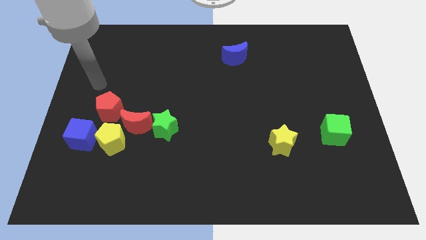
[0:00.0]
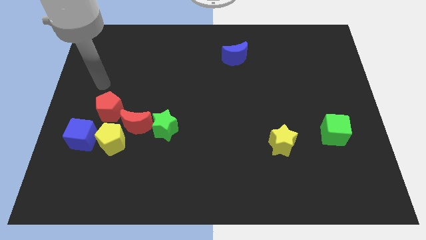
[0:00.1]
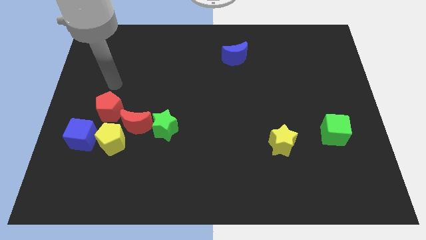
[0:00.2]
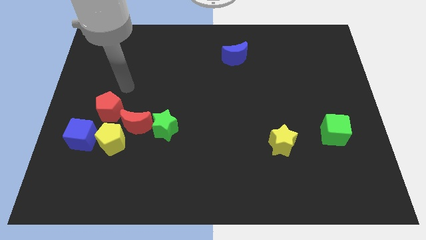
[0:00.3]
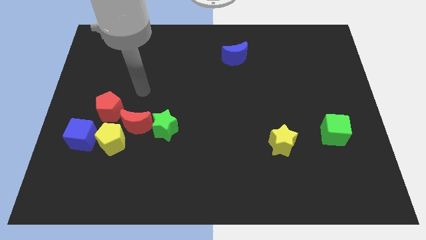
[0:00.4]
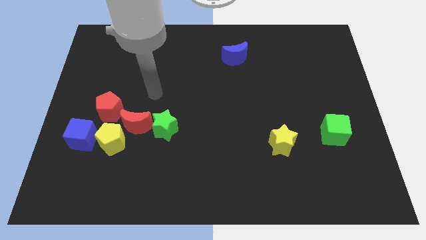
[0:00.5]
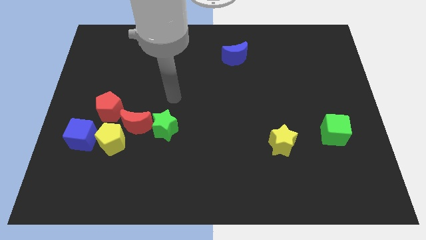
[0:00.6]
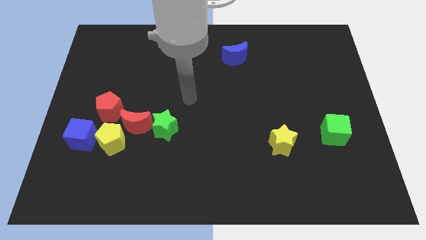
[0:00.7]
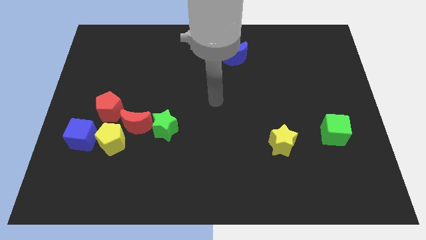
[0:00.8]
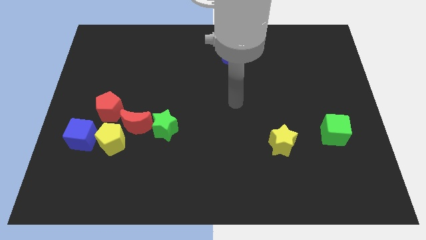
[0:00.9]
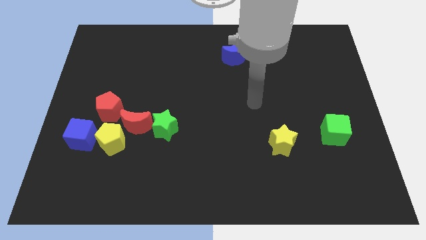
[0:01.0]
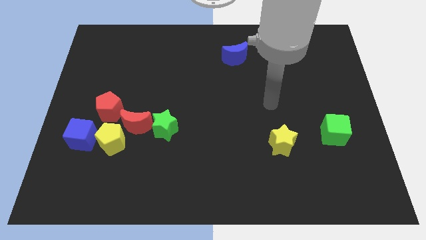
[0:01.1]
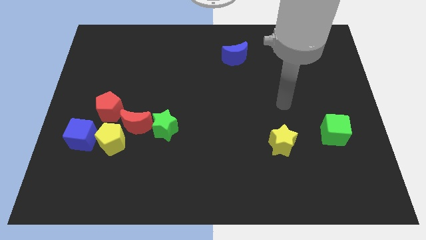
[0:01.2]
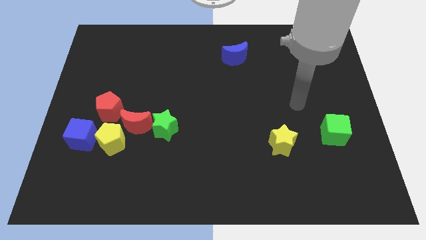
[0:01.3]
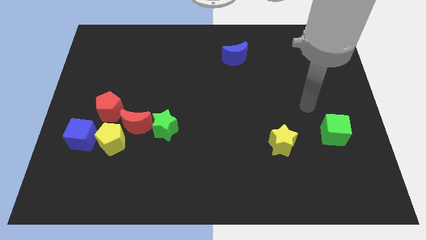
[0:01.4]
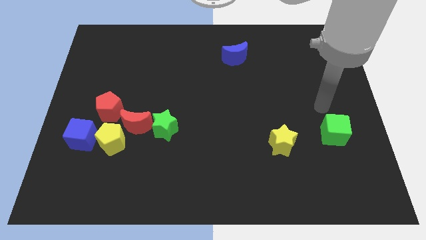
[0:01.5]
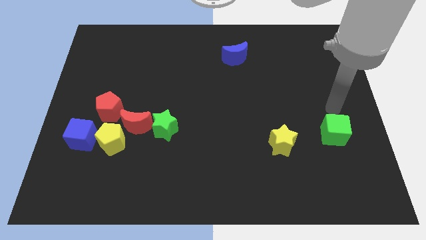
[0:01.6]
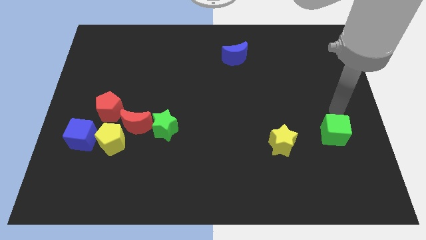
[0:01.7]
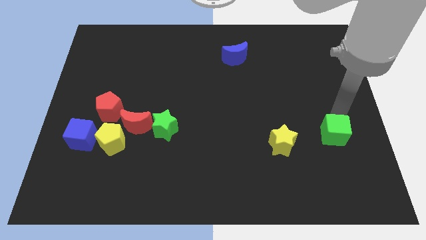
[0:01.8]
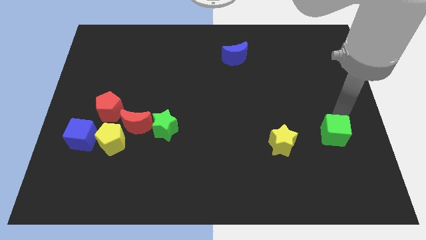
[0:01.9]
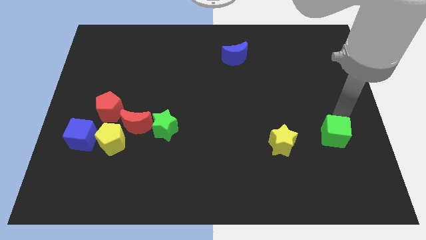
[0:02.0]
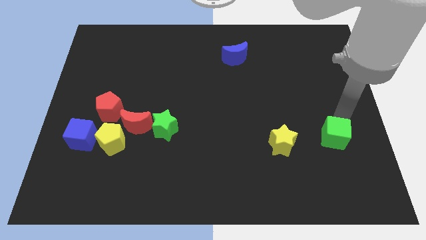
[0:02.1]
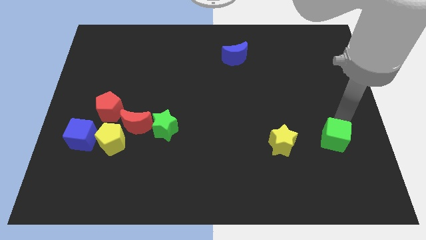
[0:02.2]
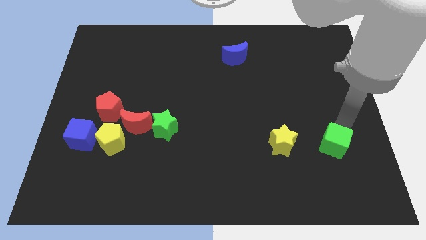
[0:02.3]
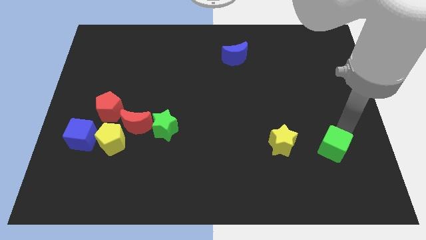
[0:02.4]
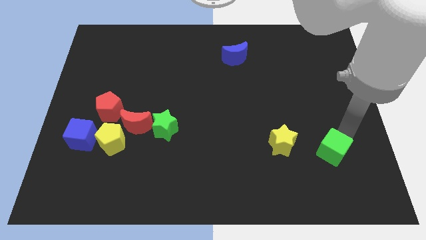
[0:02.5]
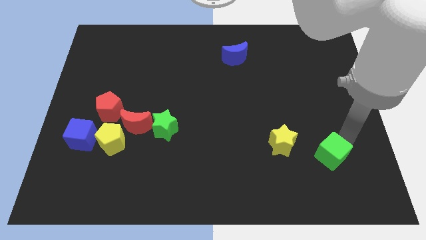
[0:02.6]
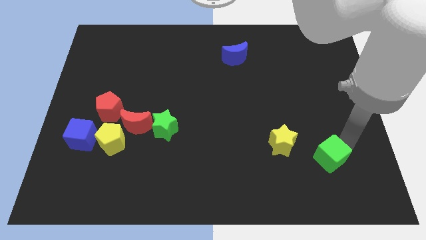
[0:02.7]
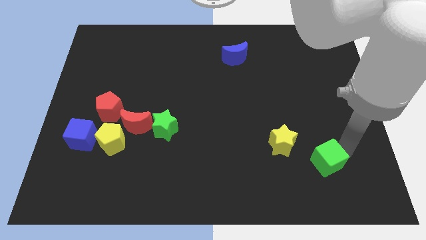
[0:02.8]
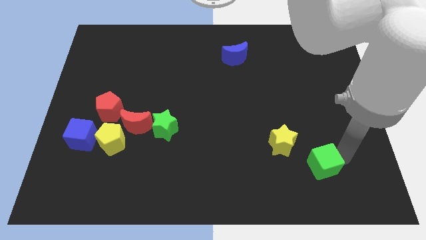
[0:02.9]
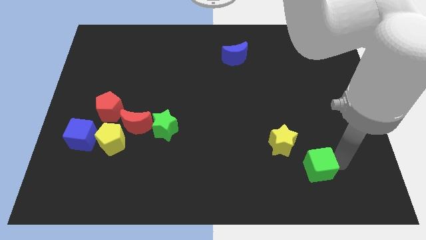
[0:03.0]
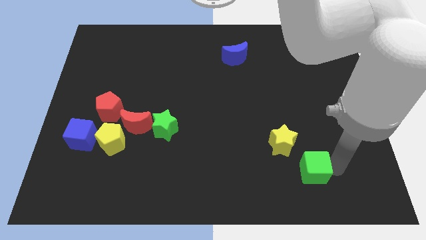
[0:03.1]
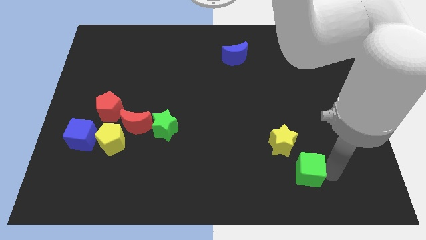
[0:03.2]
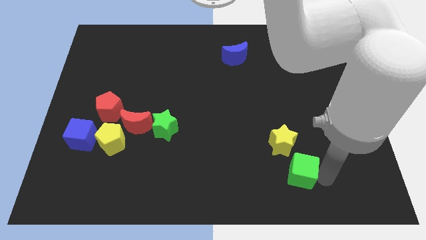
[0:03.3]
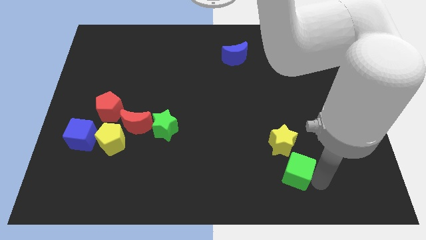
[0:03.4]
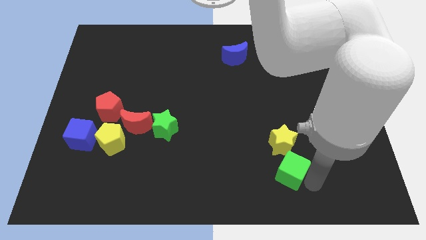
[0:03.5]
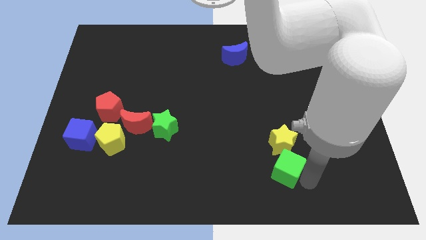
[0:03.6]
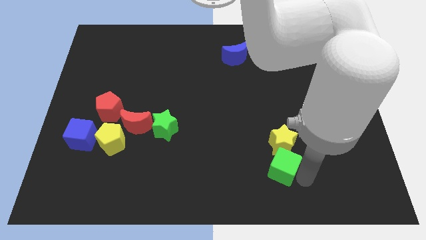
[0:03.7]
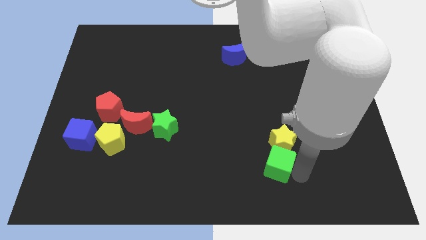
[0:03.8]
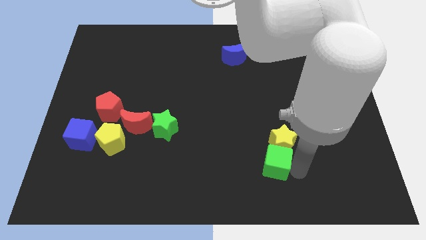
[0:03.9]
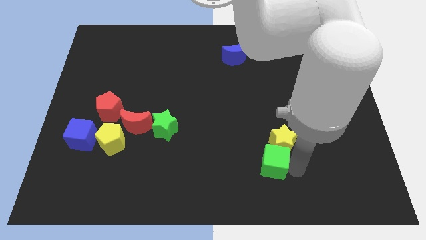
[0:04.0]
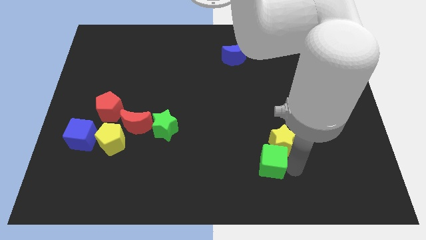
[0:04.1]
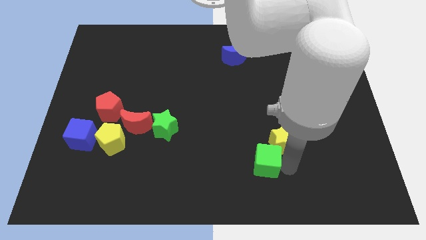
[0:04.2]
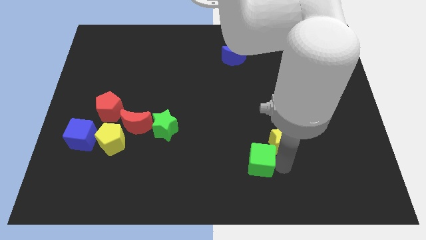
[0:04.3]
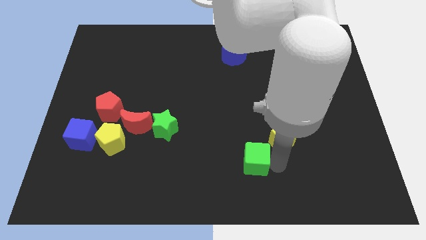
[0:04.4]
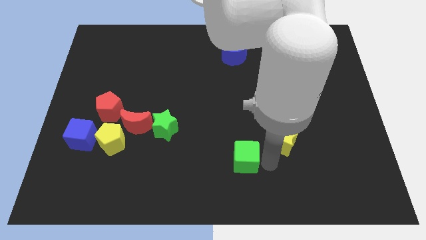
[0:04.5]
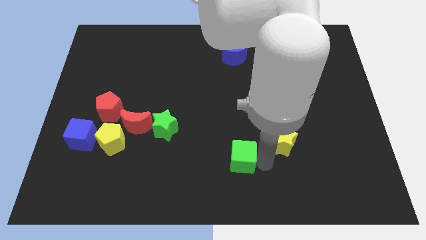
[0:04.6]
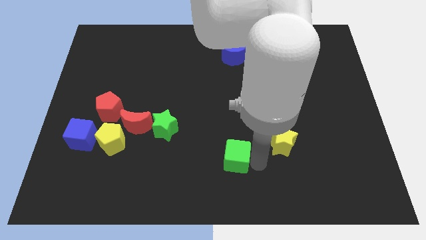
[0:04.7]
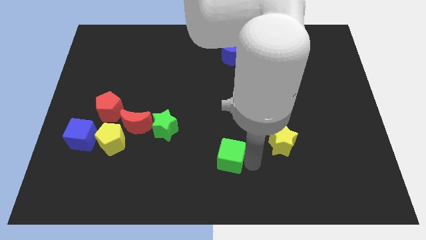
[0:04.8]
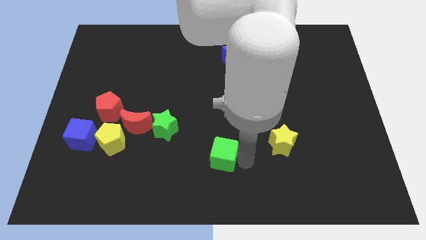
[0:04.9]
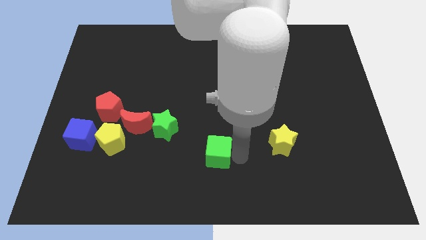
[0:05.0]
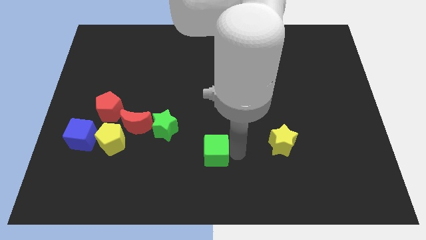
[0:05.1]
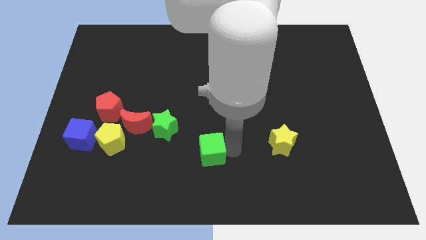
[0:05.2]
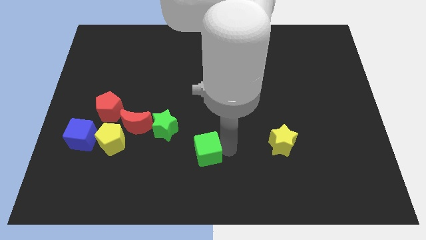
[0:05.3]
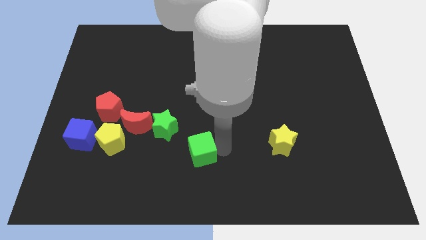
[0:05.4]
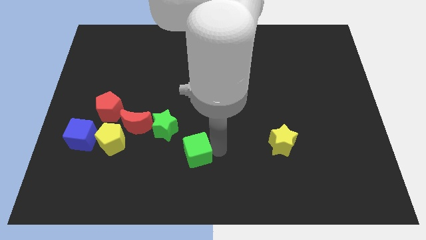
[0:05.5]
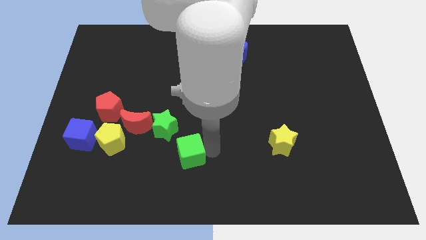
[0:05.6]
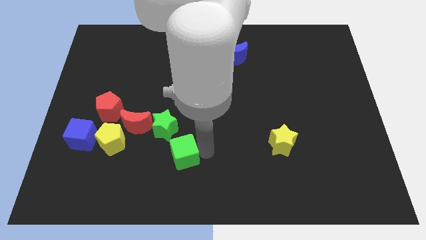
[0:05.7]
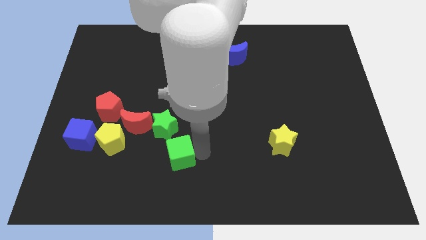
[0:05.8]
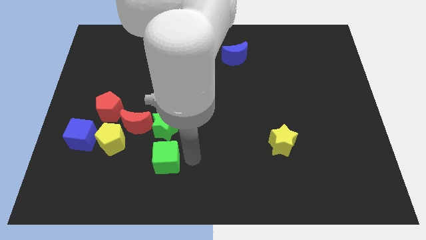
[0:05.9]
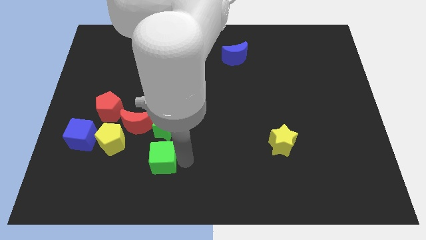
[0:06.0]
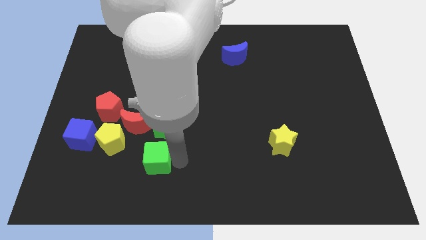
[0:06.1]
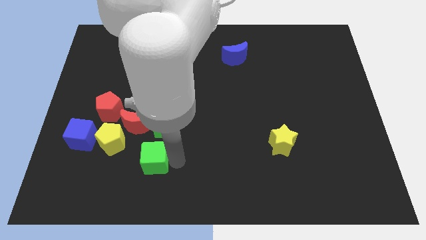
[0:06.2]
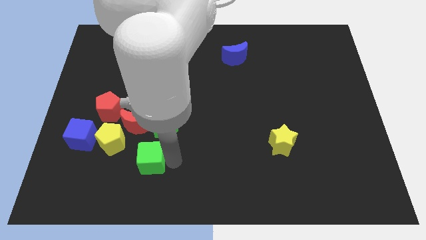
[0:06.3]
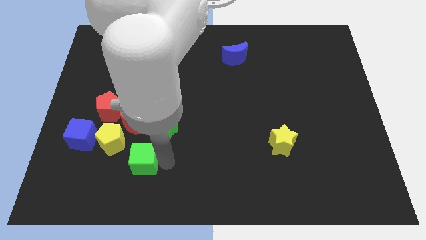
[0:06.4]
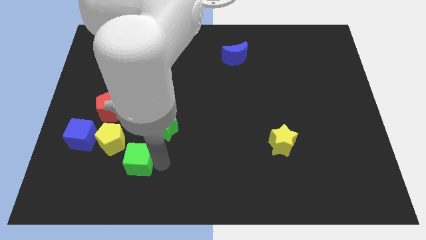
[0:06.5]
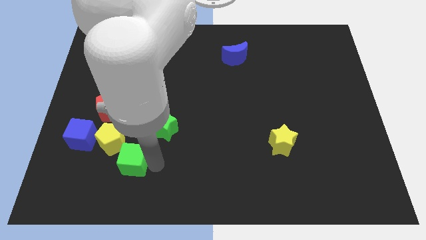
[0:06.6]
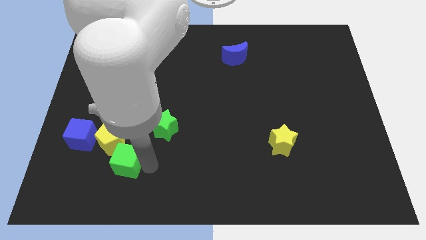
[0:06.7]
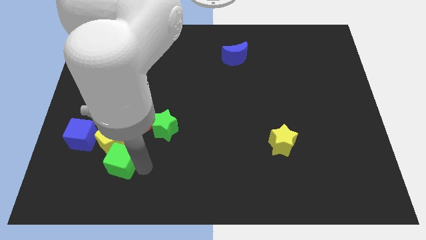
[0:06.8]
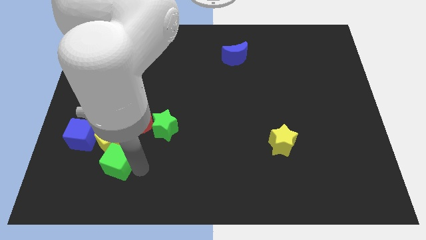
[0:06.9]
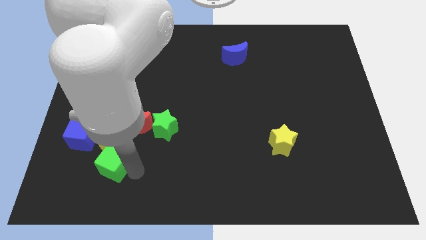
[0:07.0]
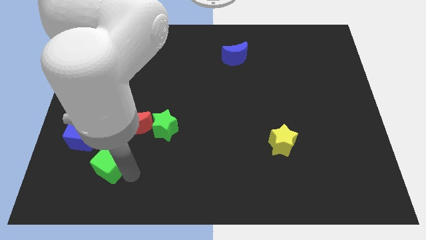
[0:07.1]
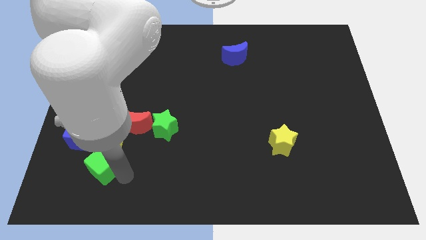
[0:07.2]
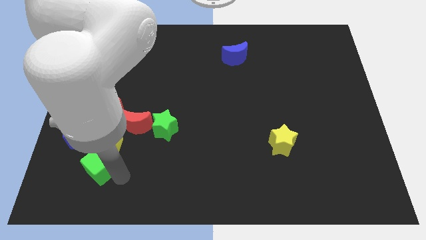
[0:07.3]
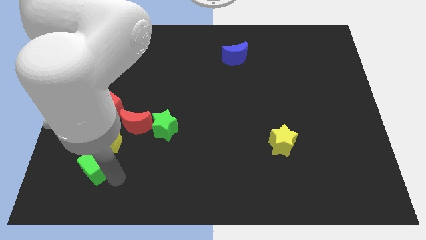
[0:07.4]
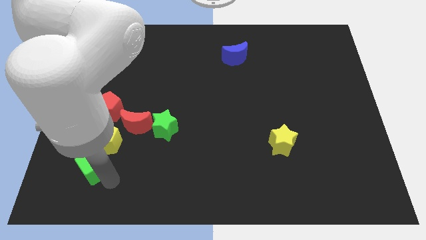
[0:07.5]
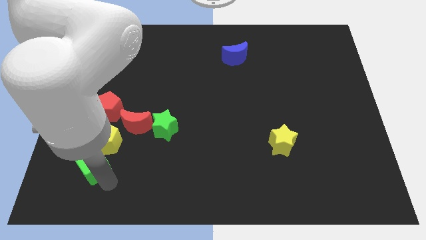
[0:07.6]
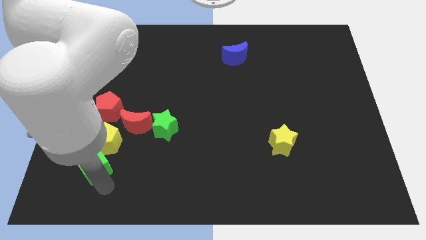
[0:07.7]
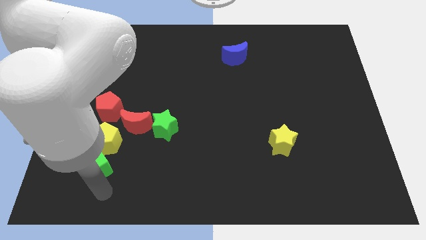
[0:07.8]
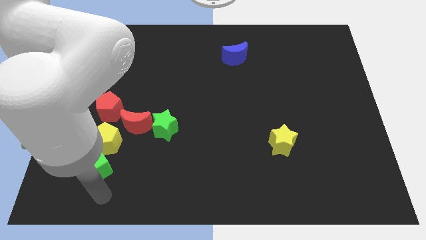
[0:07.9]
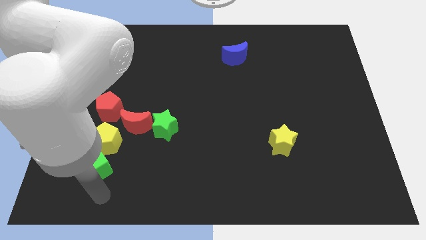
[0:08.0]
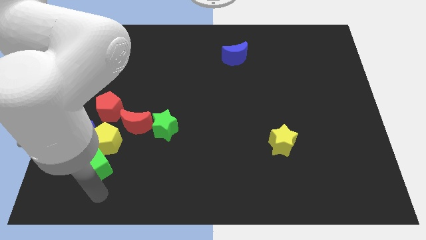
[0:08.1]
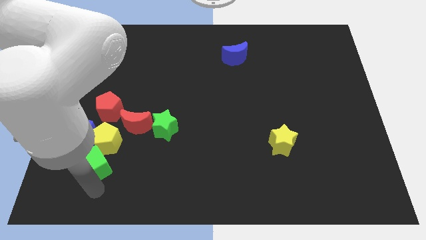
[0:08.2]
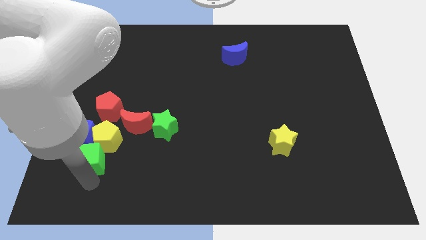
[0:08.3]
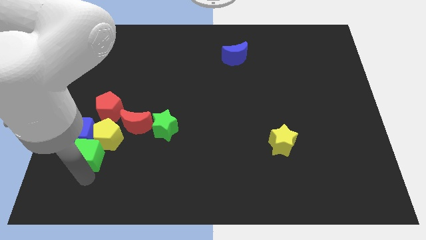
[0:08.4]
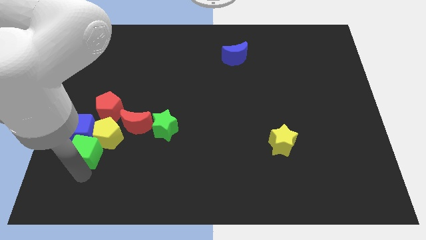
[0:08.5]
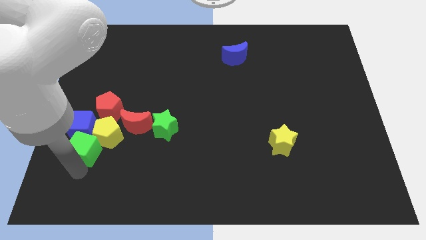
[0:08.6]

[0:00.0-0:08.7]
slide the green cube to the blue cube
